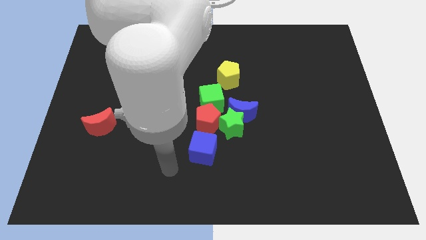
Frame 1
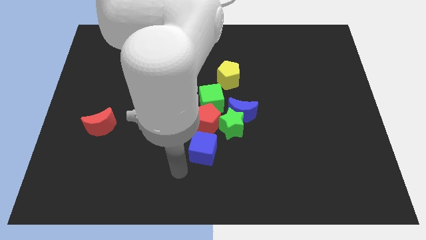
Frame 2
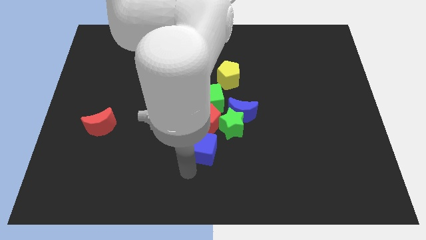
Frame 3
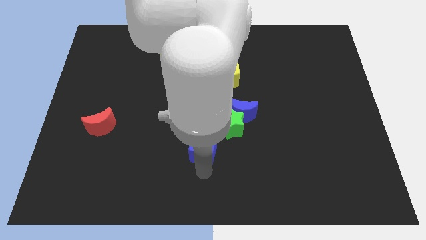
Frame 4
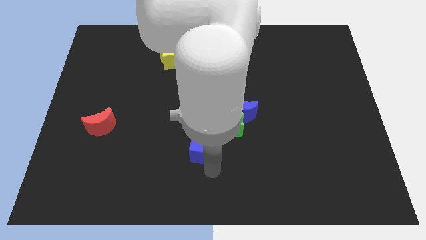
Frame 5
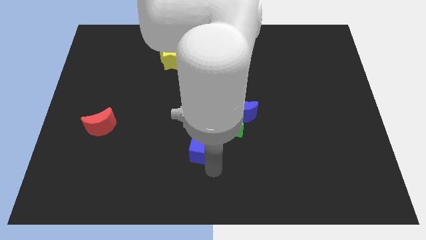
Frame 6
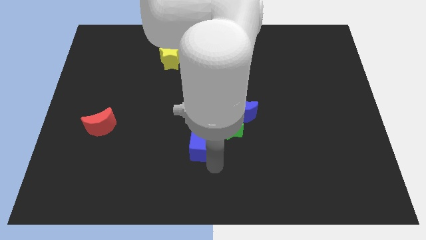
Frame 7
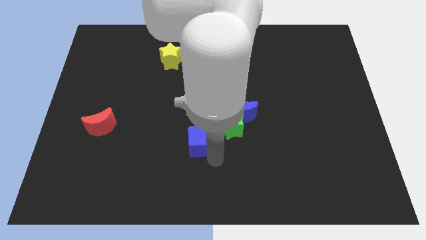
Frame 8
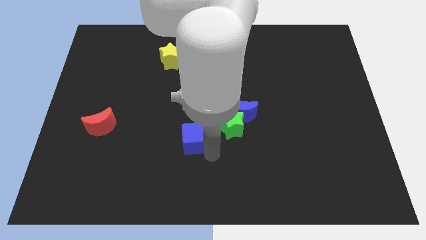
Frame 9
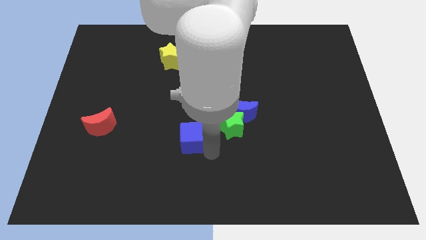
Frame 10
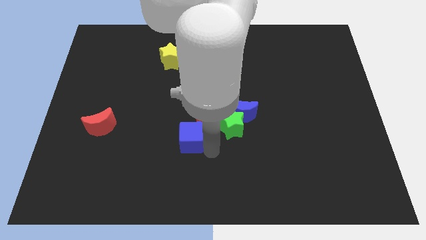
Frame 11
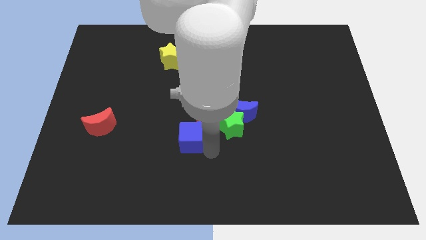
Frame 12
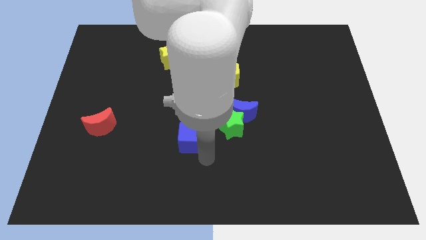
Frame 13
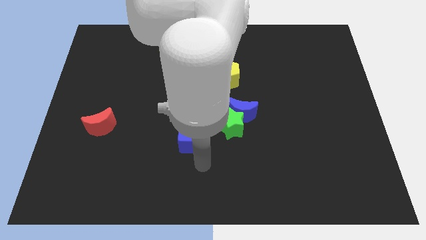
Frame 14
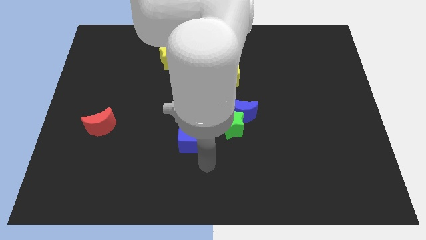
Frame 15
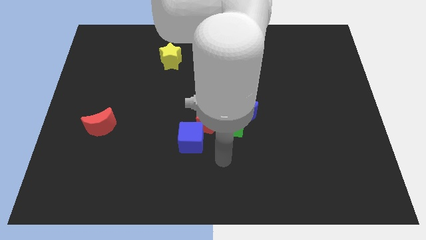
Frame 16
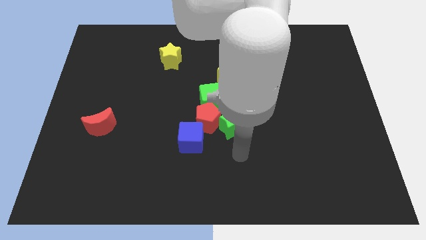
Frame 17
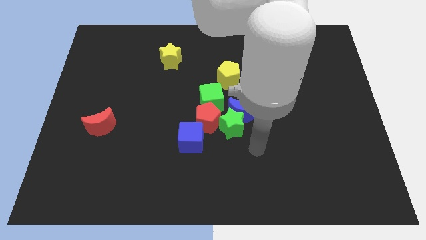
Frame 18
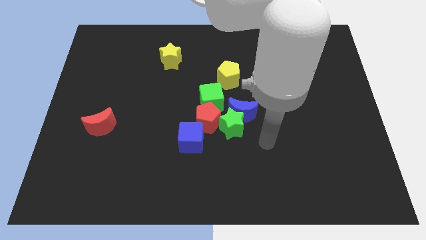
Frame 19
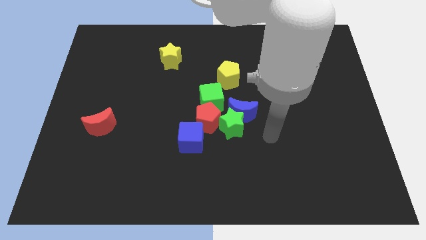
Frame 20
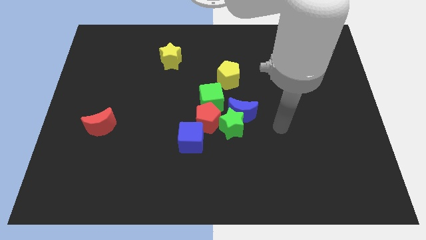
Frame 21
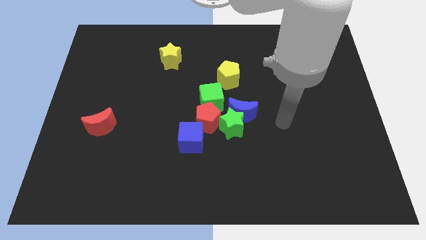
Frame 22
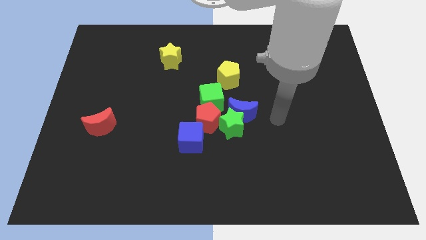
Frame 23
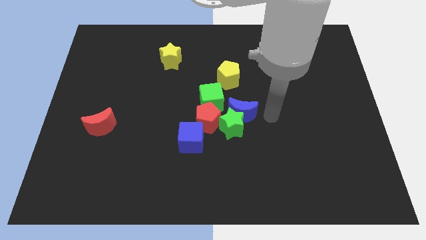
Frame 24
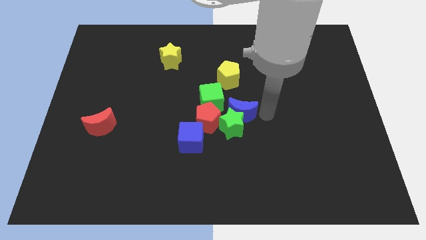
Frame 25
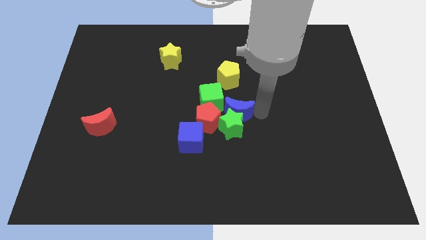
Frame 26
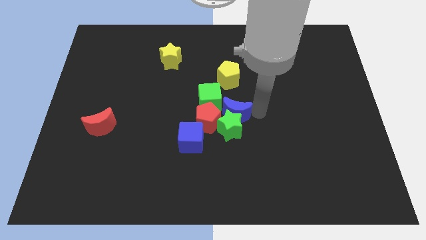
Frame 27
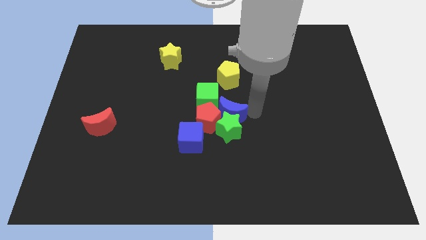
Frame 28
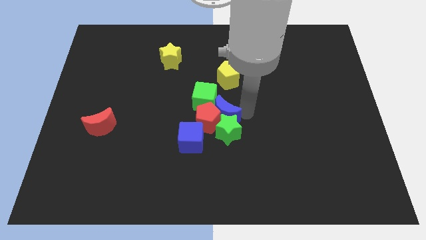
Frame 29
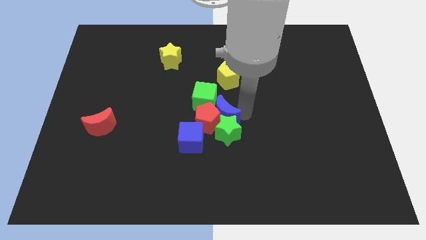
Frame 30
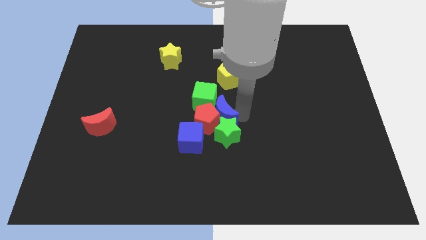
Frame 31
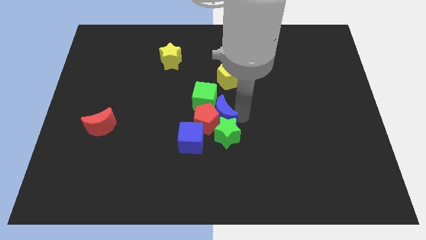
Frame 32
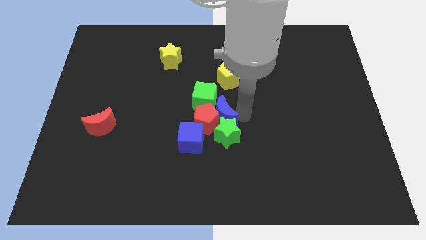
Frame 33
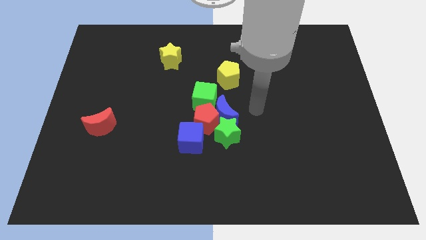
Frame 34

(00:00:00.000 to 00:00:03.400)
adjust the group of blocks at the center of the table

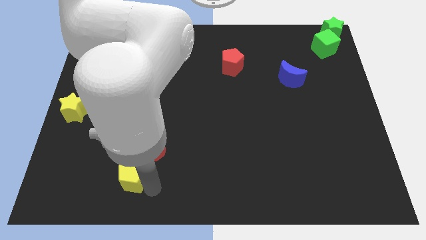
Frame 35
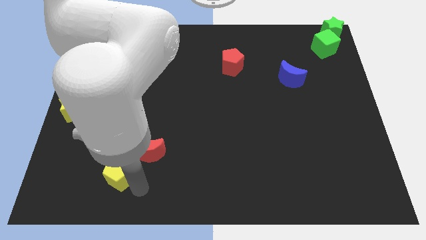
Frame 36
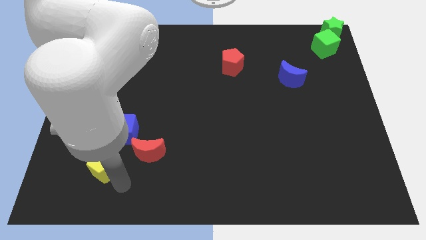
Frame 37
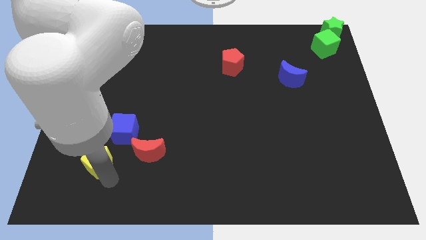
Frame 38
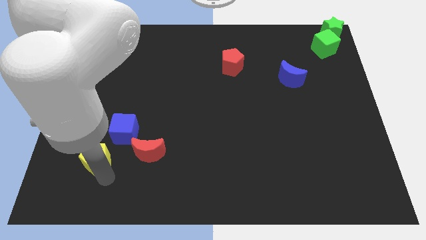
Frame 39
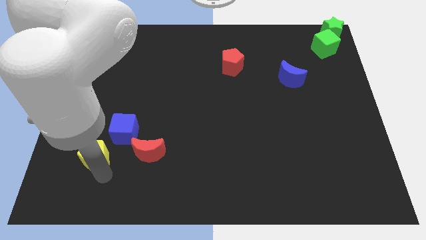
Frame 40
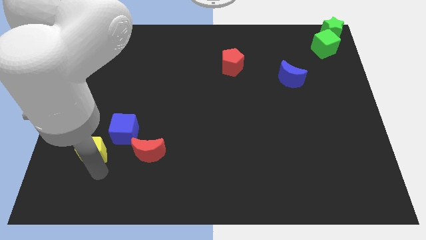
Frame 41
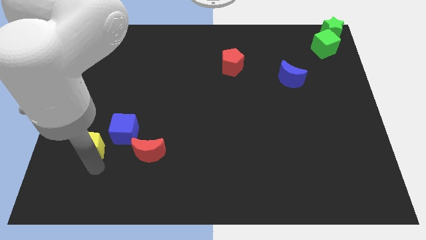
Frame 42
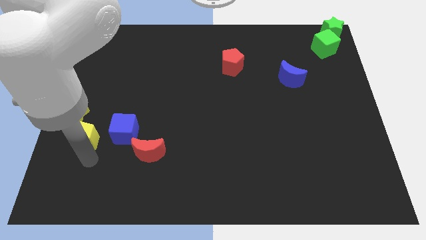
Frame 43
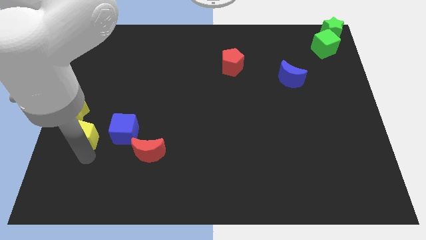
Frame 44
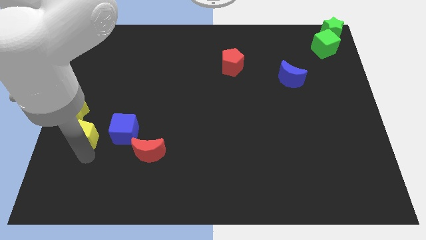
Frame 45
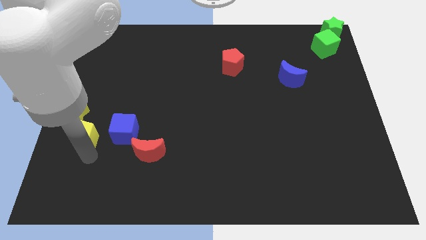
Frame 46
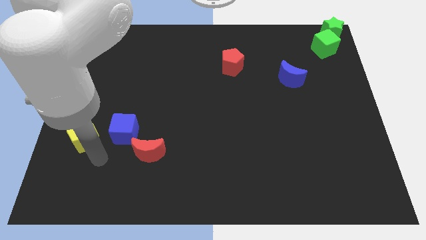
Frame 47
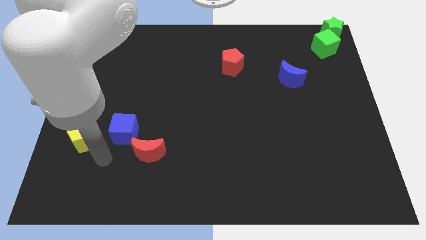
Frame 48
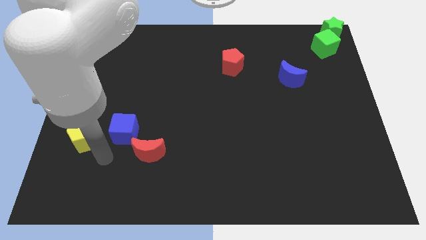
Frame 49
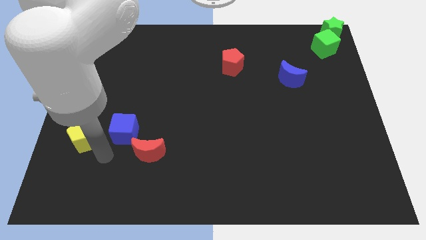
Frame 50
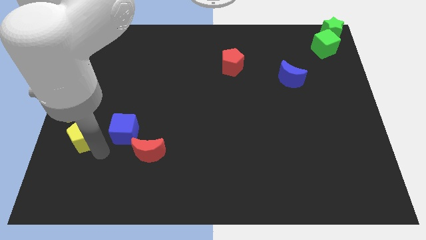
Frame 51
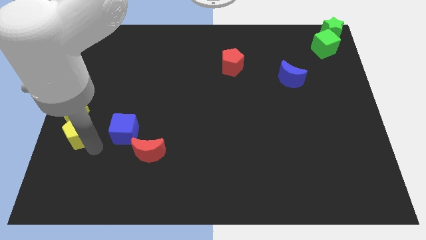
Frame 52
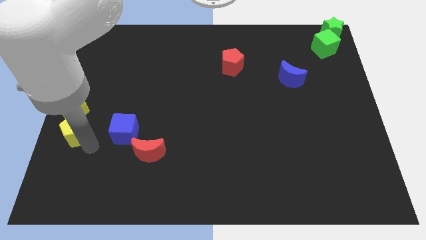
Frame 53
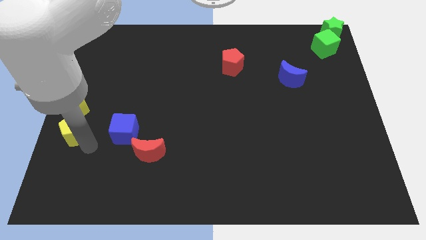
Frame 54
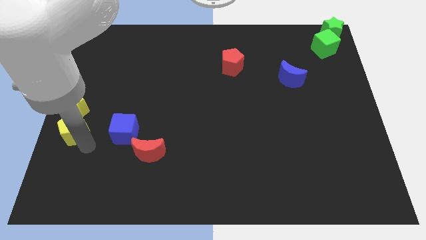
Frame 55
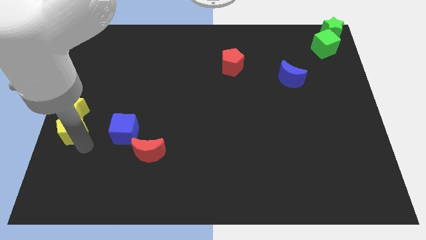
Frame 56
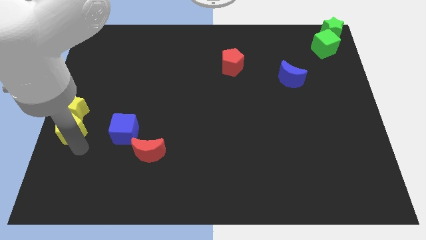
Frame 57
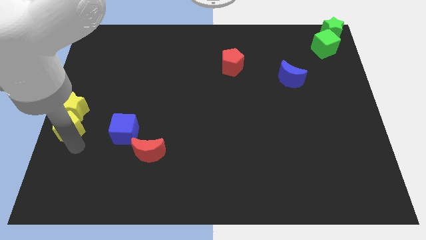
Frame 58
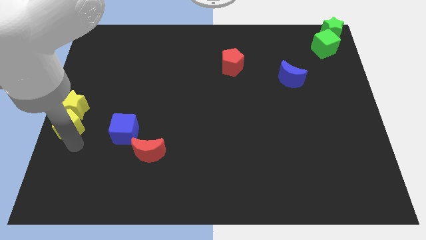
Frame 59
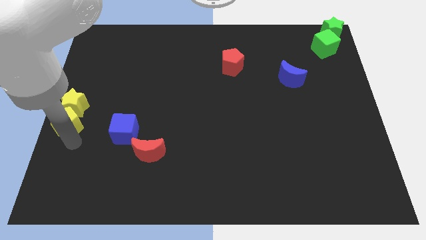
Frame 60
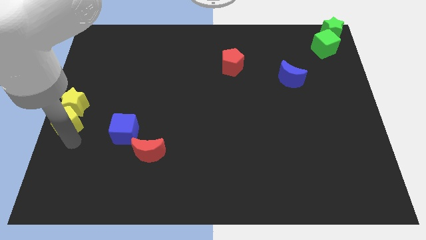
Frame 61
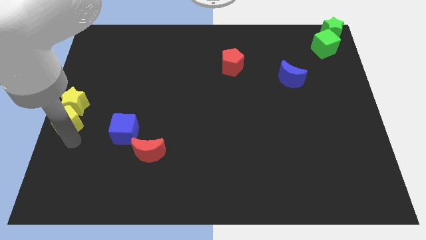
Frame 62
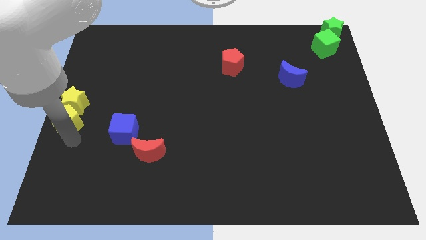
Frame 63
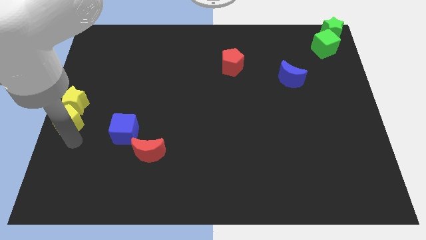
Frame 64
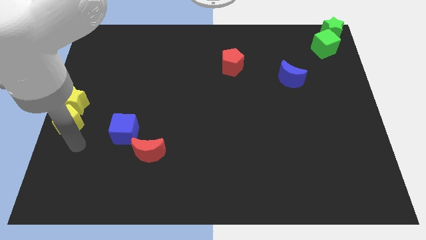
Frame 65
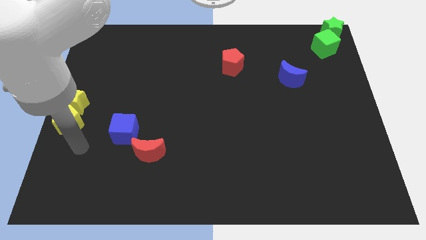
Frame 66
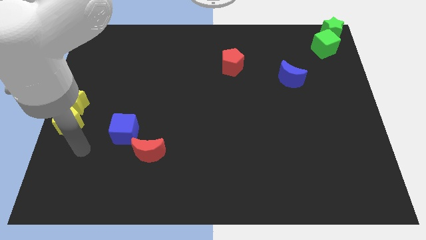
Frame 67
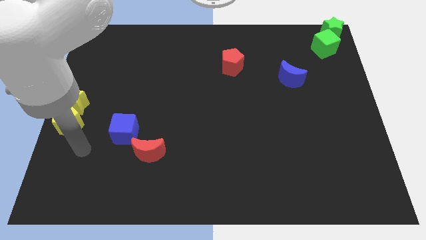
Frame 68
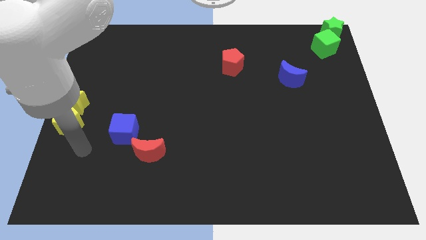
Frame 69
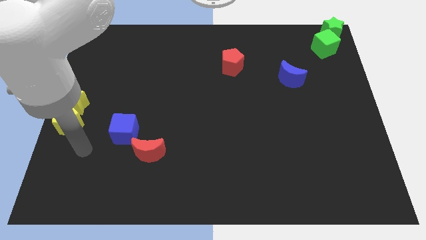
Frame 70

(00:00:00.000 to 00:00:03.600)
push the yellow pentagon into the yellow star

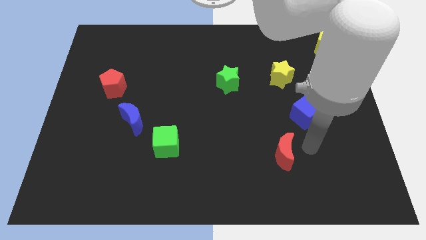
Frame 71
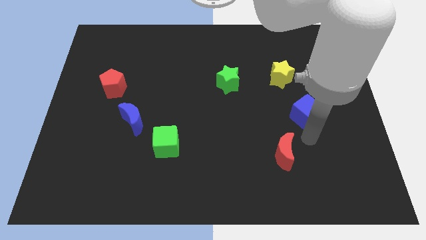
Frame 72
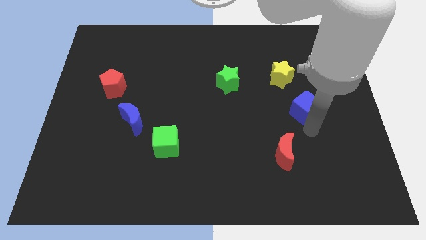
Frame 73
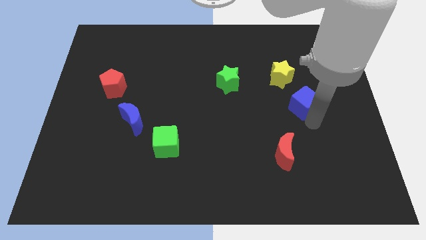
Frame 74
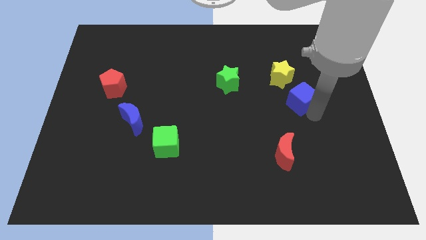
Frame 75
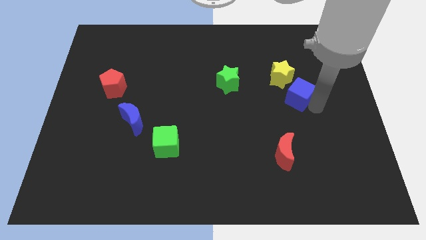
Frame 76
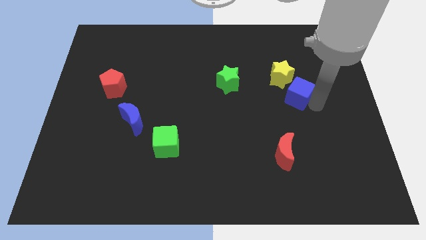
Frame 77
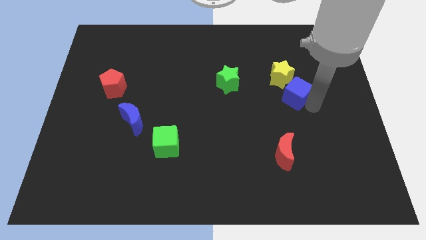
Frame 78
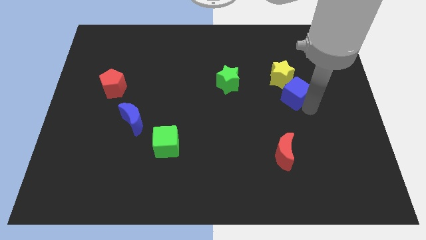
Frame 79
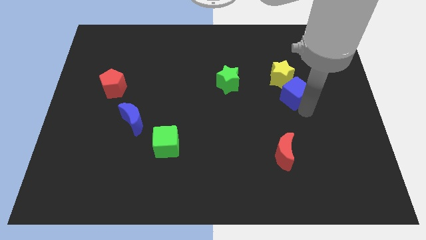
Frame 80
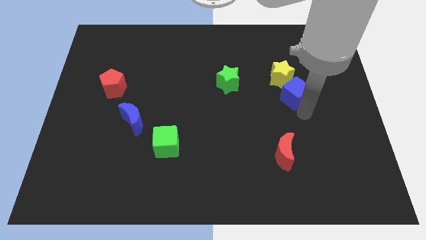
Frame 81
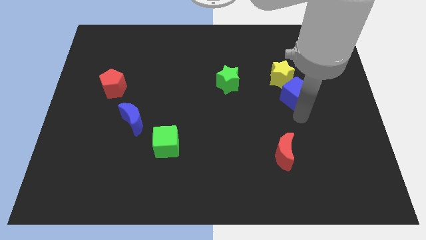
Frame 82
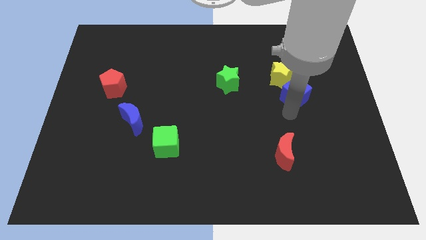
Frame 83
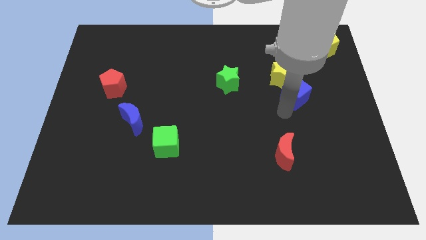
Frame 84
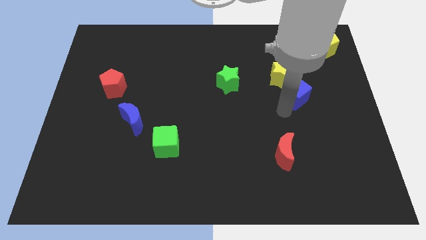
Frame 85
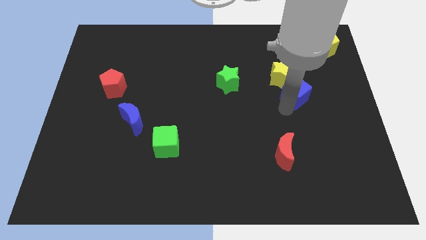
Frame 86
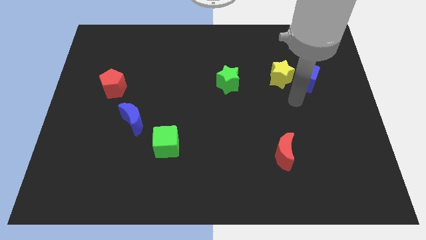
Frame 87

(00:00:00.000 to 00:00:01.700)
place the blue cube right to the yellow star

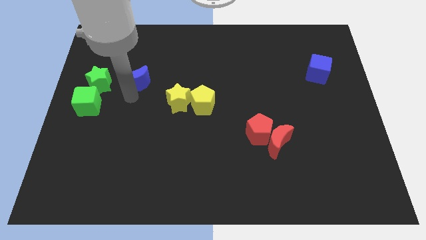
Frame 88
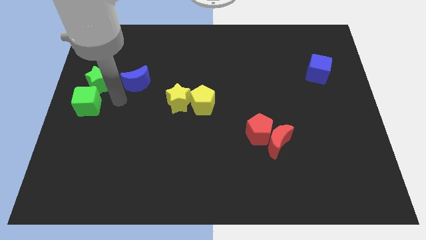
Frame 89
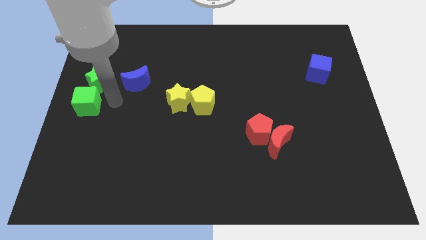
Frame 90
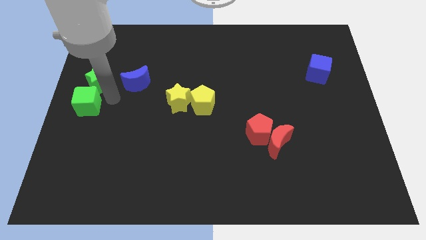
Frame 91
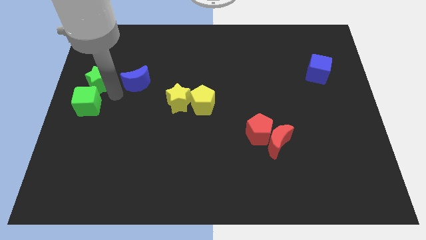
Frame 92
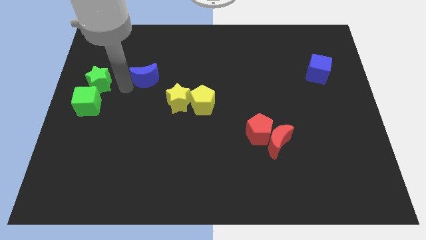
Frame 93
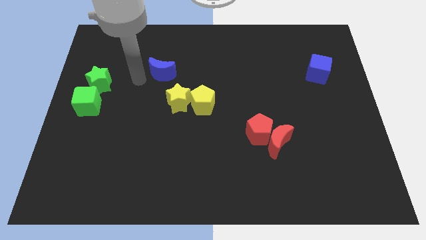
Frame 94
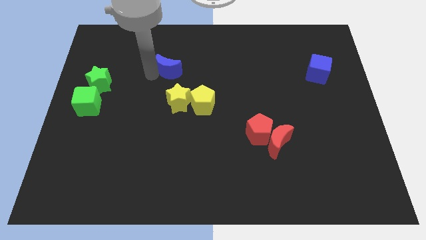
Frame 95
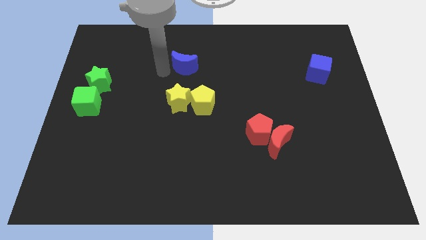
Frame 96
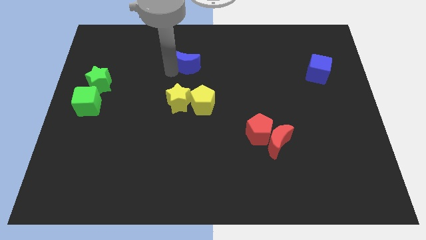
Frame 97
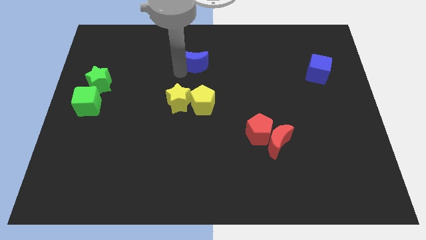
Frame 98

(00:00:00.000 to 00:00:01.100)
push the blue moon to the top side of both the yellow blocks
